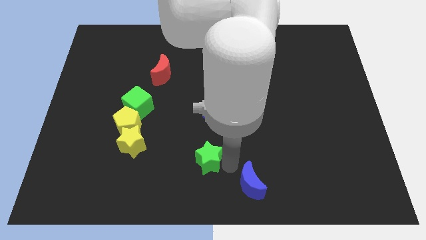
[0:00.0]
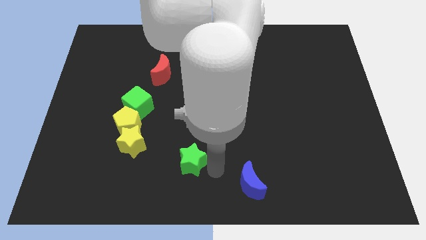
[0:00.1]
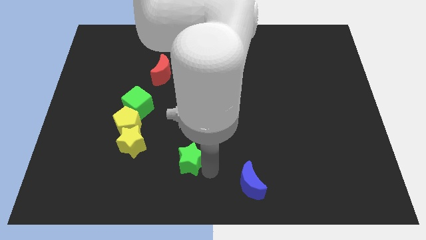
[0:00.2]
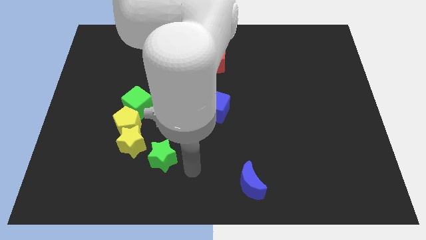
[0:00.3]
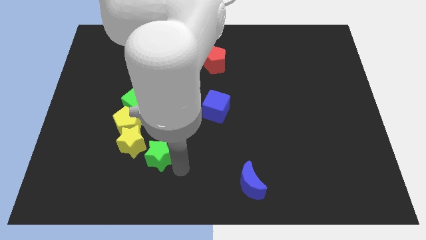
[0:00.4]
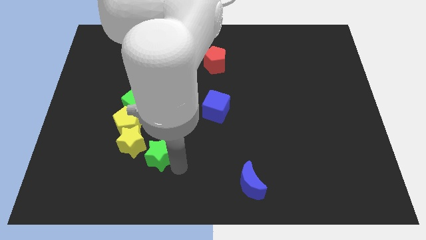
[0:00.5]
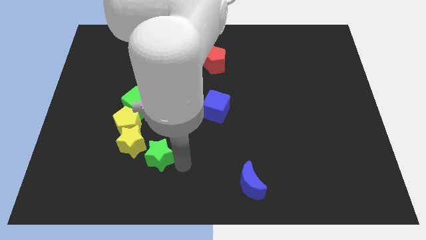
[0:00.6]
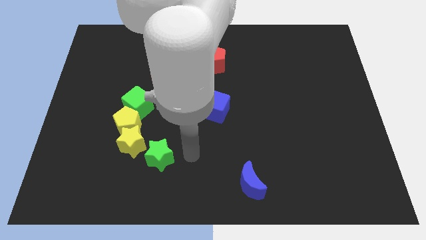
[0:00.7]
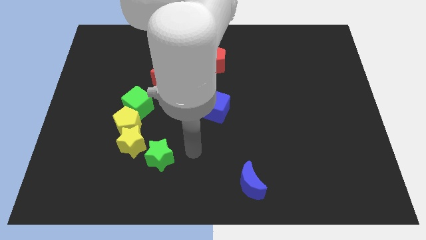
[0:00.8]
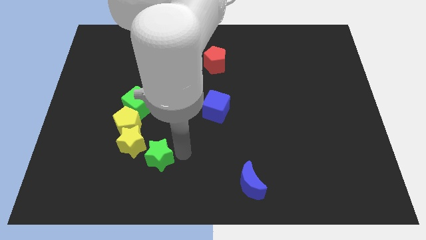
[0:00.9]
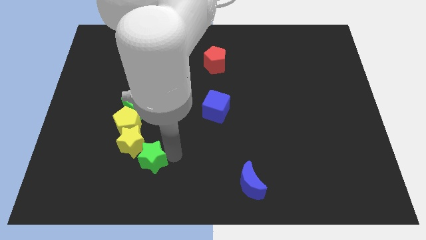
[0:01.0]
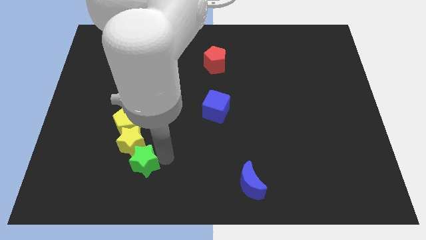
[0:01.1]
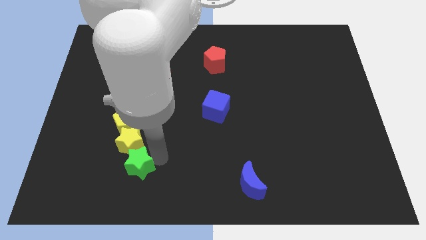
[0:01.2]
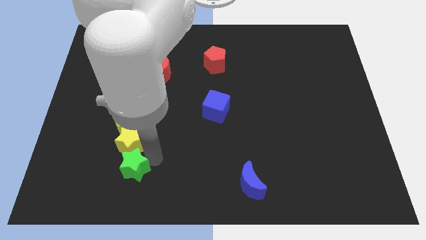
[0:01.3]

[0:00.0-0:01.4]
push the green star into yellow star

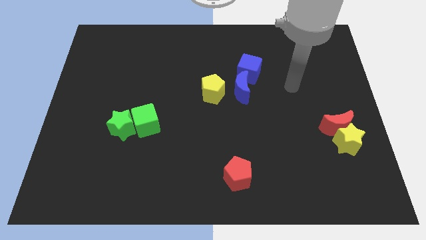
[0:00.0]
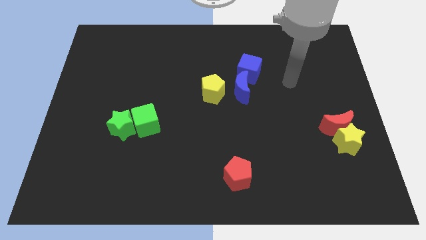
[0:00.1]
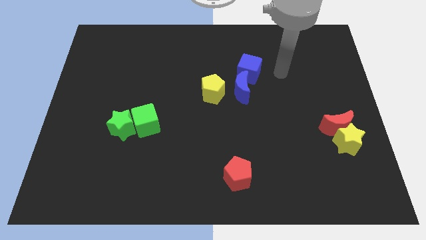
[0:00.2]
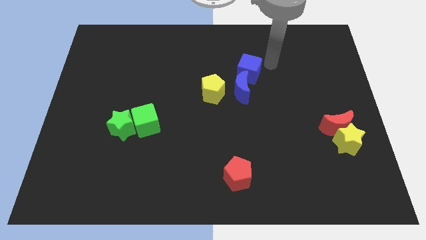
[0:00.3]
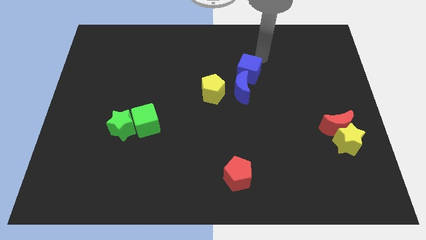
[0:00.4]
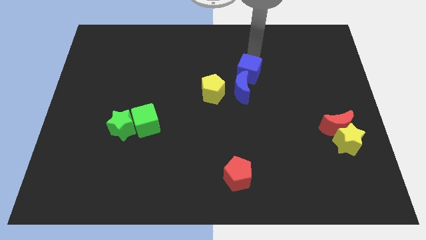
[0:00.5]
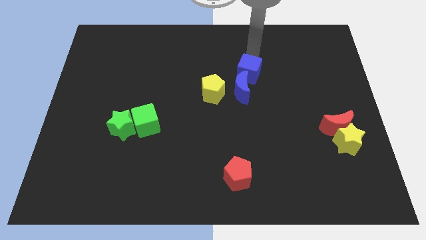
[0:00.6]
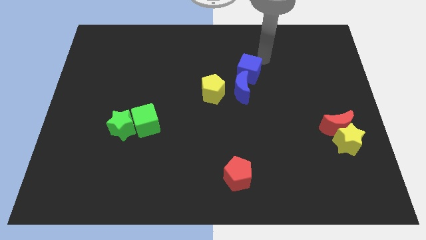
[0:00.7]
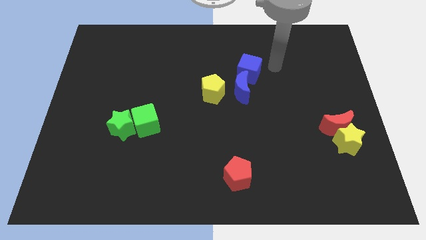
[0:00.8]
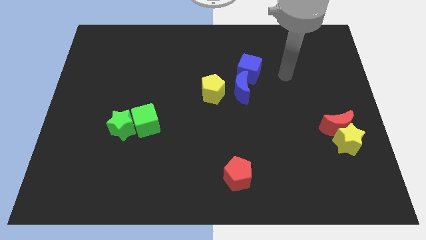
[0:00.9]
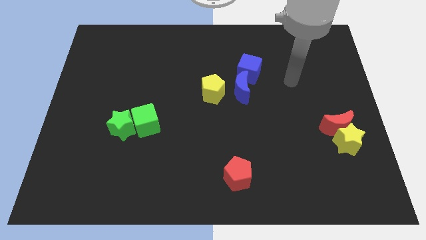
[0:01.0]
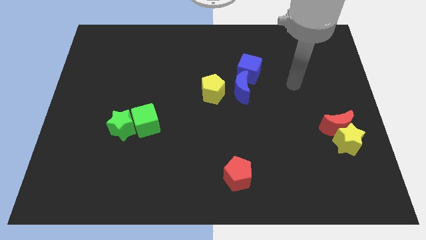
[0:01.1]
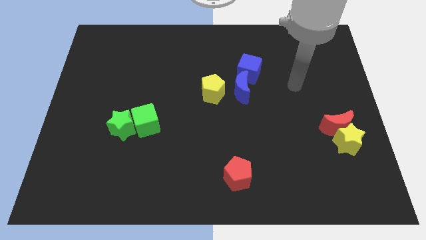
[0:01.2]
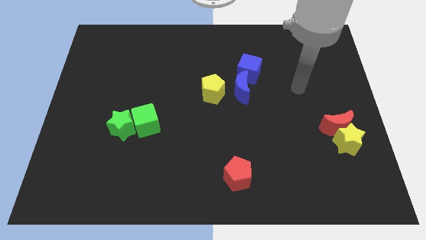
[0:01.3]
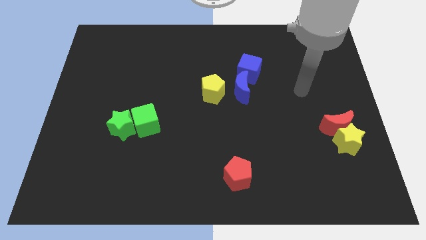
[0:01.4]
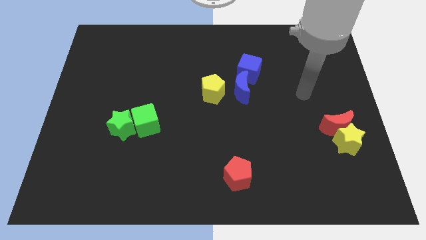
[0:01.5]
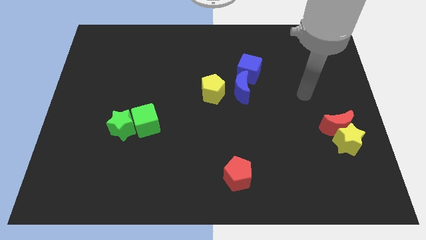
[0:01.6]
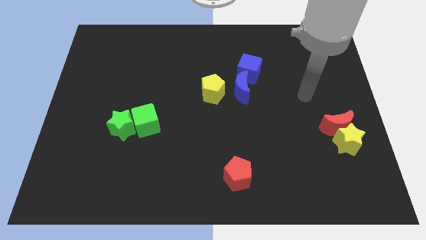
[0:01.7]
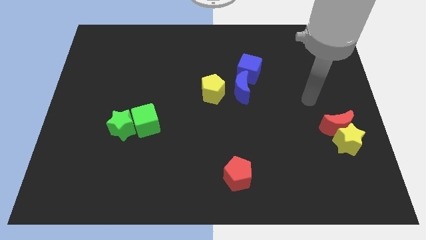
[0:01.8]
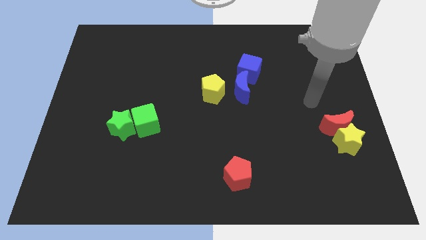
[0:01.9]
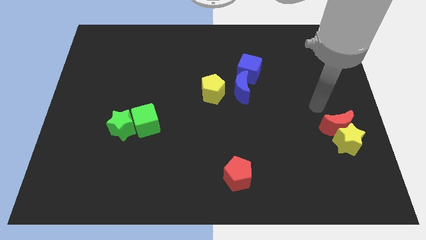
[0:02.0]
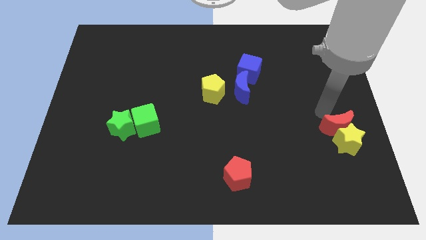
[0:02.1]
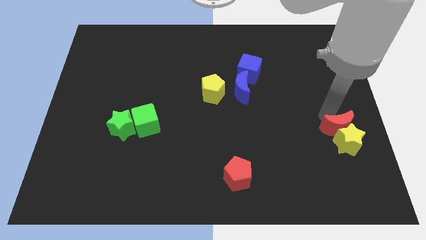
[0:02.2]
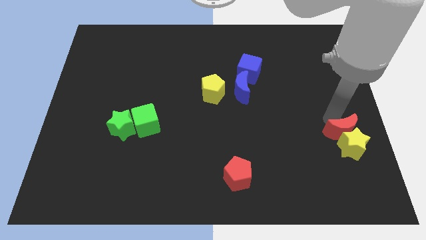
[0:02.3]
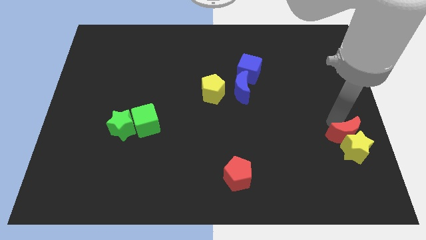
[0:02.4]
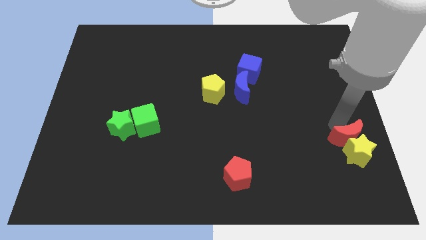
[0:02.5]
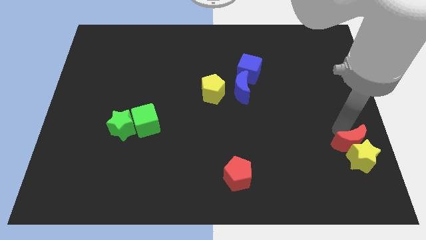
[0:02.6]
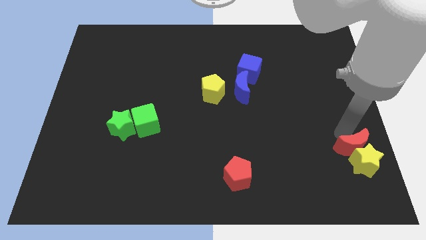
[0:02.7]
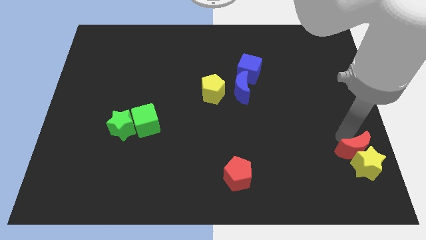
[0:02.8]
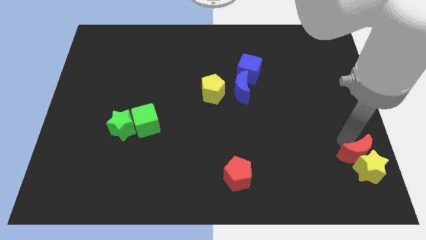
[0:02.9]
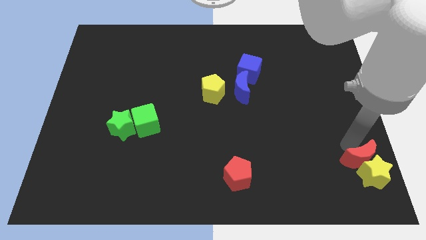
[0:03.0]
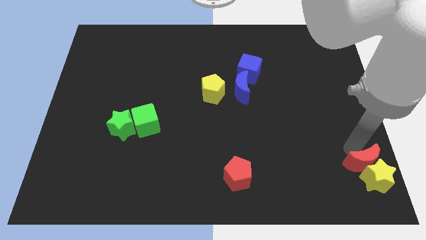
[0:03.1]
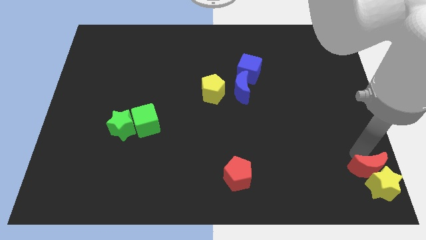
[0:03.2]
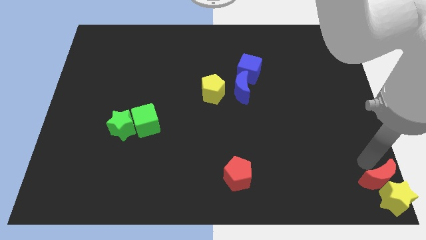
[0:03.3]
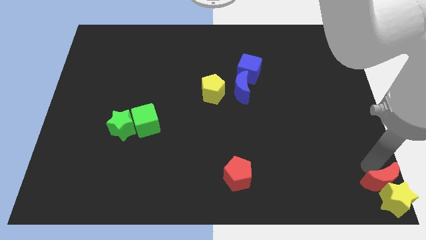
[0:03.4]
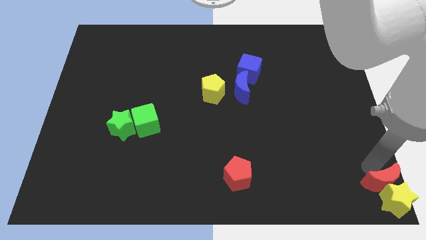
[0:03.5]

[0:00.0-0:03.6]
move the red moon and yellow star to the bottom rightcorner

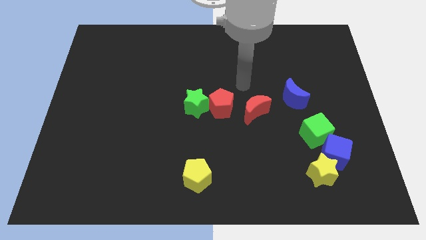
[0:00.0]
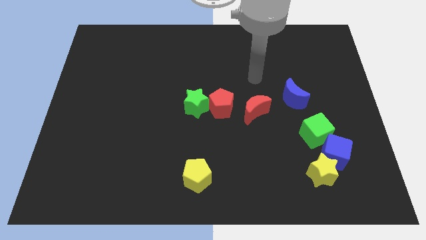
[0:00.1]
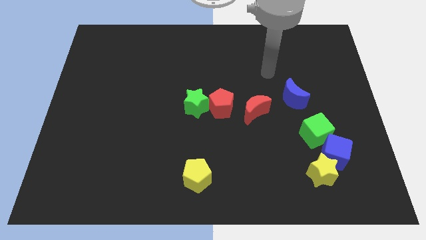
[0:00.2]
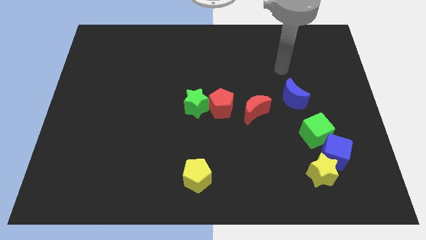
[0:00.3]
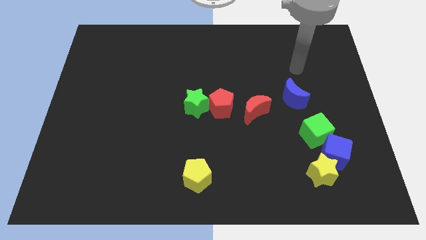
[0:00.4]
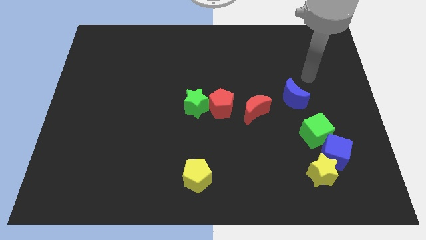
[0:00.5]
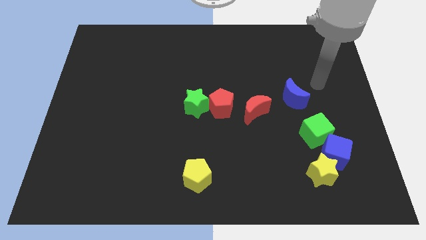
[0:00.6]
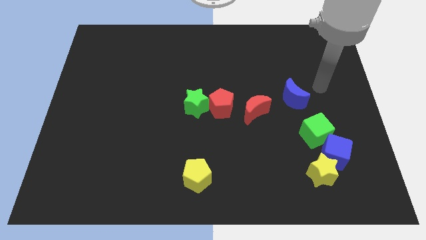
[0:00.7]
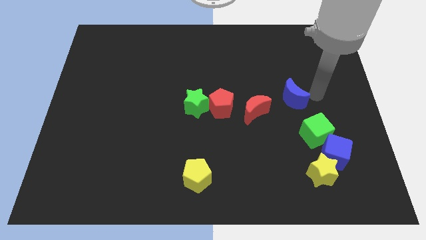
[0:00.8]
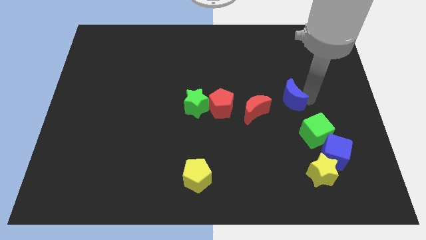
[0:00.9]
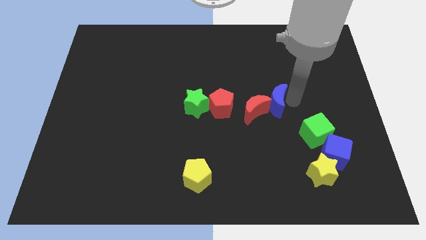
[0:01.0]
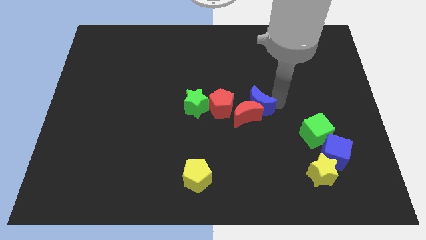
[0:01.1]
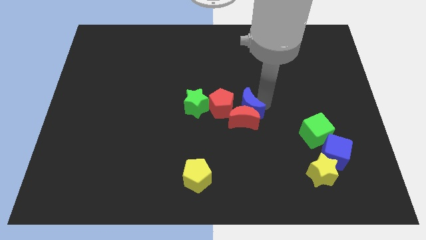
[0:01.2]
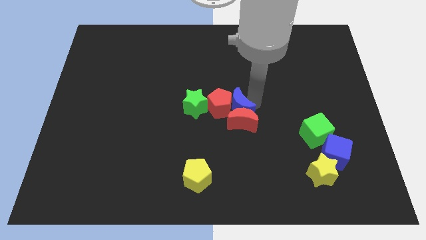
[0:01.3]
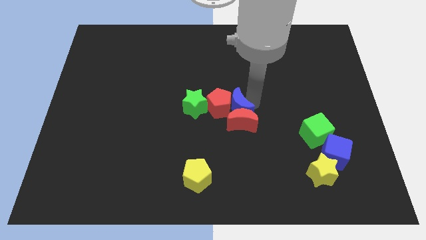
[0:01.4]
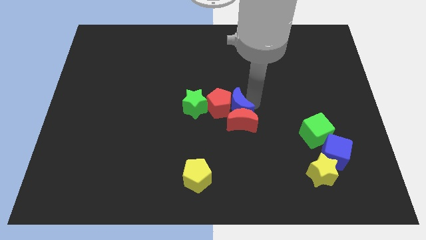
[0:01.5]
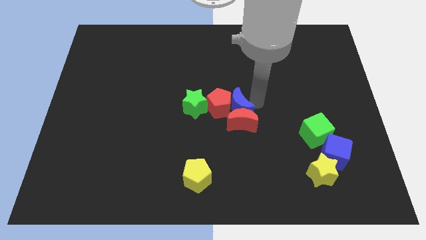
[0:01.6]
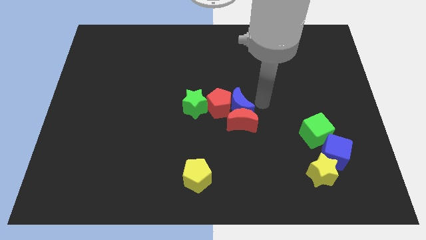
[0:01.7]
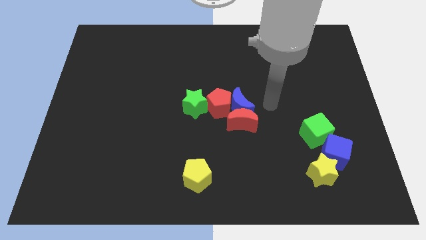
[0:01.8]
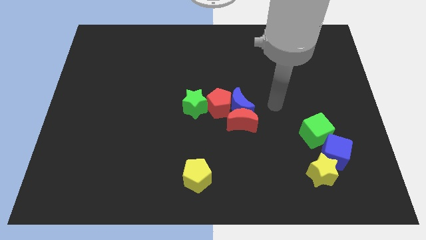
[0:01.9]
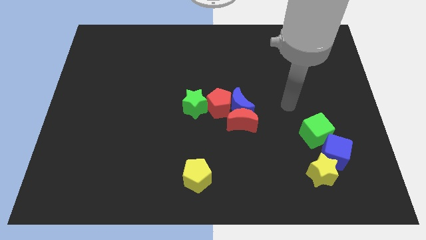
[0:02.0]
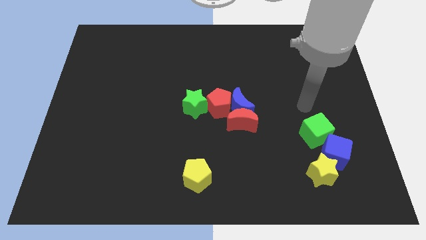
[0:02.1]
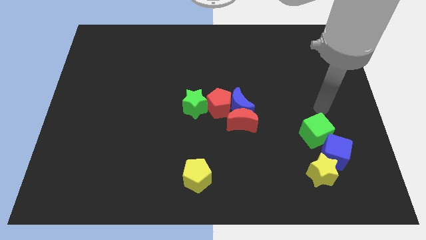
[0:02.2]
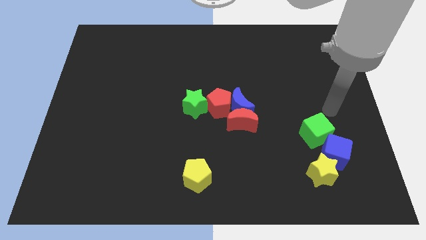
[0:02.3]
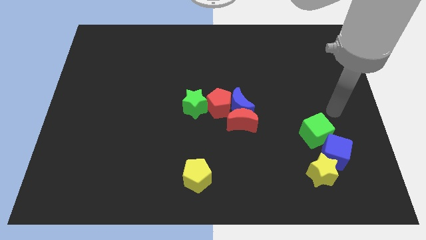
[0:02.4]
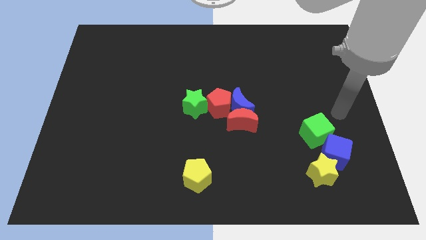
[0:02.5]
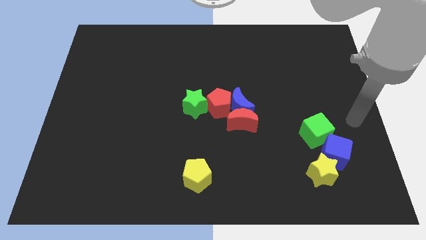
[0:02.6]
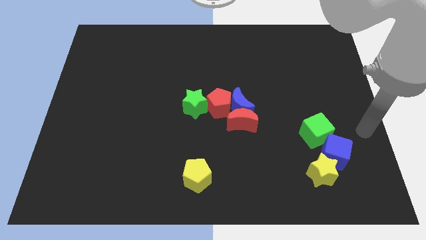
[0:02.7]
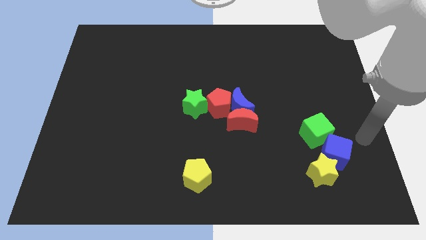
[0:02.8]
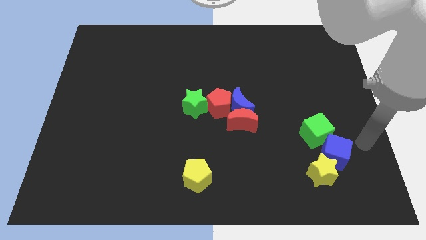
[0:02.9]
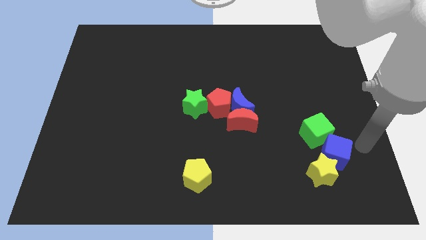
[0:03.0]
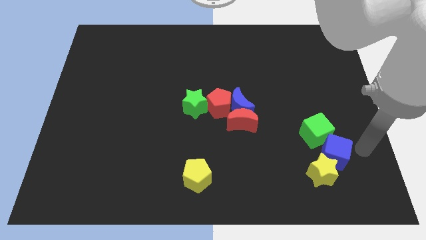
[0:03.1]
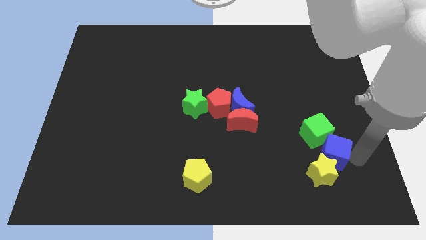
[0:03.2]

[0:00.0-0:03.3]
put the blue moon to the right of the red pentagon

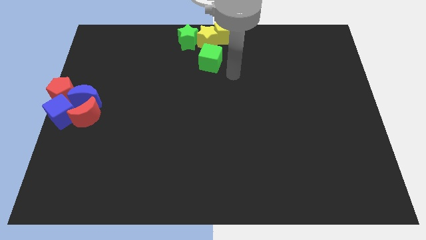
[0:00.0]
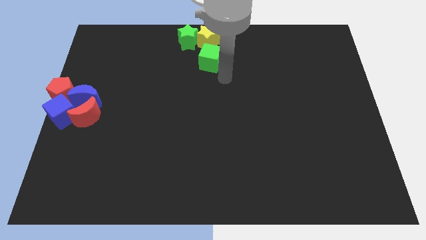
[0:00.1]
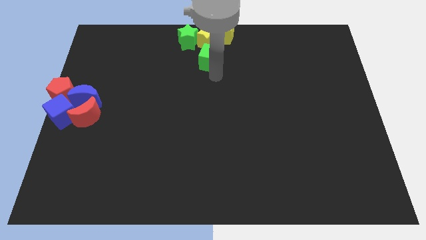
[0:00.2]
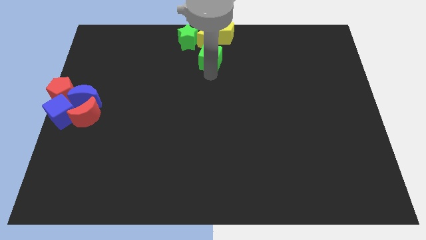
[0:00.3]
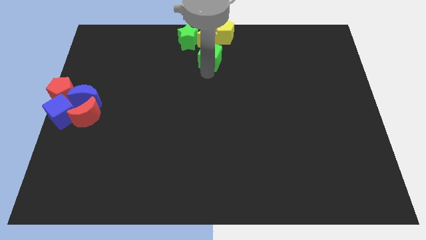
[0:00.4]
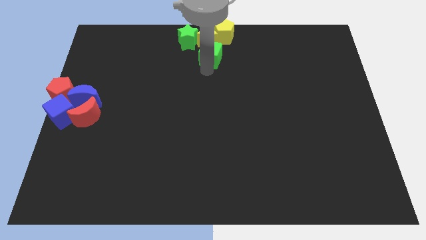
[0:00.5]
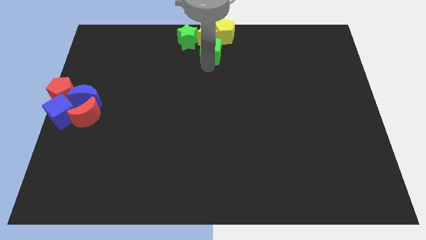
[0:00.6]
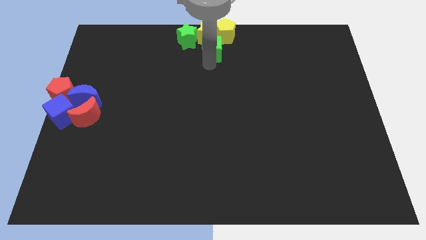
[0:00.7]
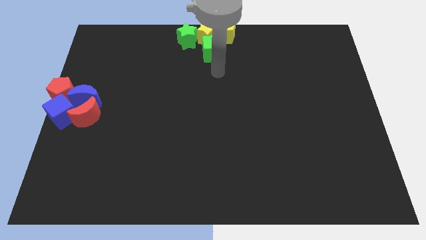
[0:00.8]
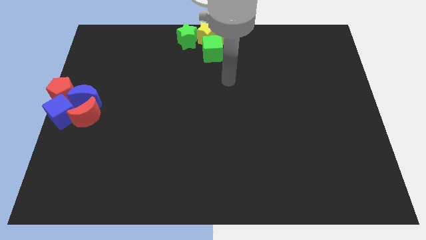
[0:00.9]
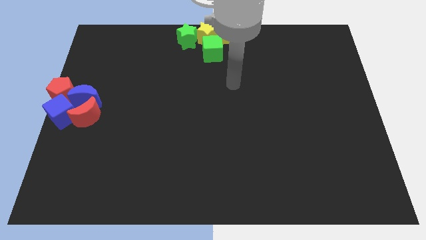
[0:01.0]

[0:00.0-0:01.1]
push the green cube upwards slightly
